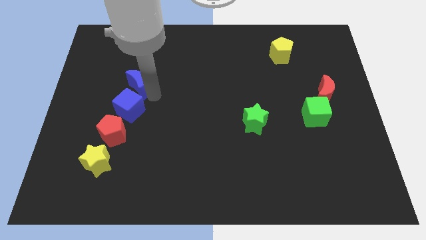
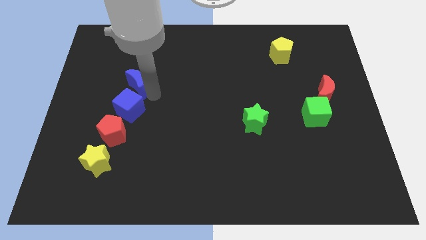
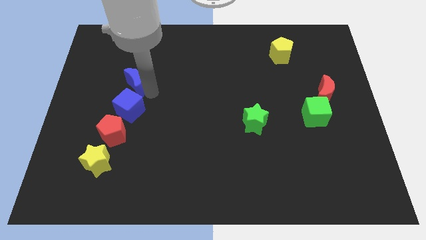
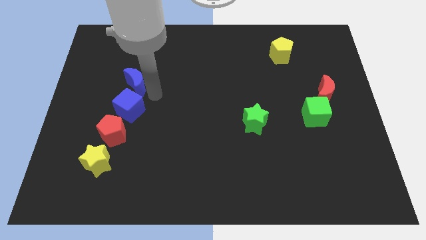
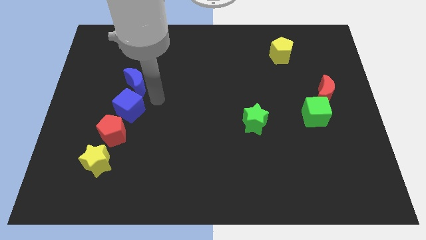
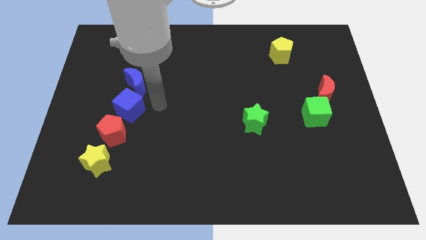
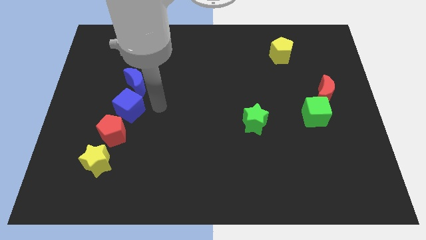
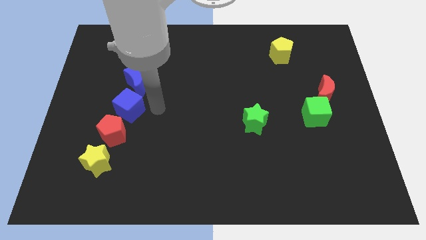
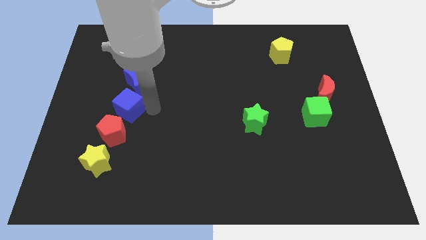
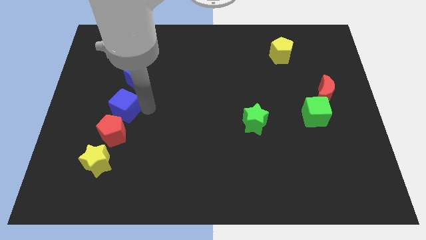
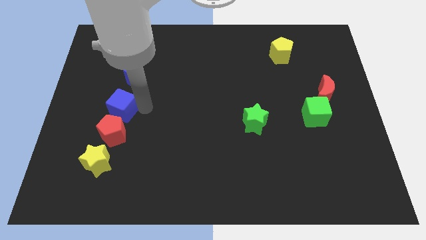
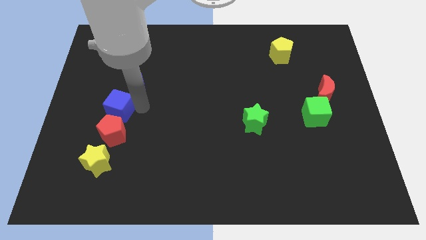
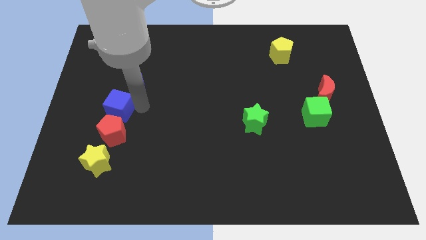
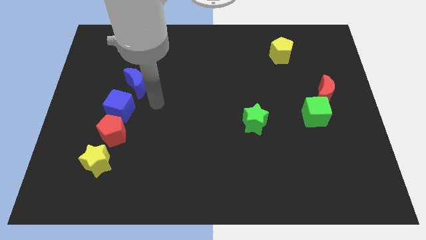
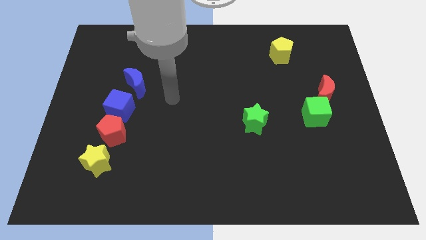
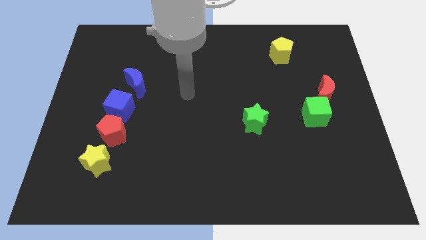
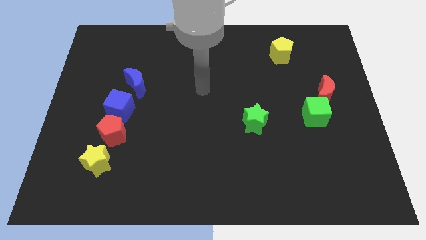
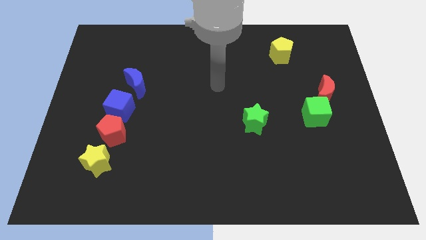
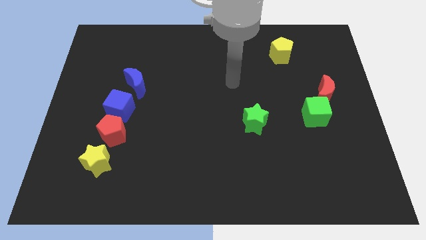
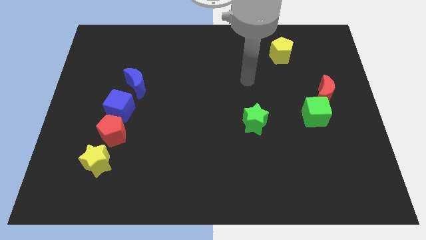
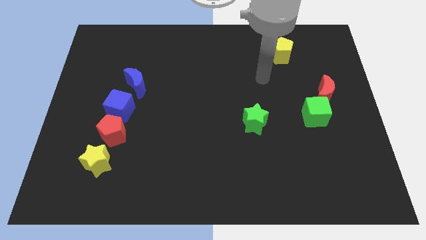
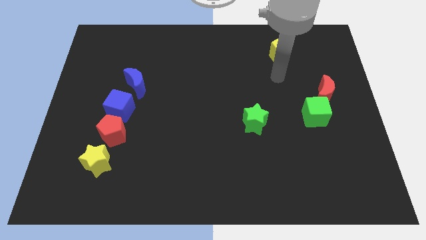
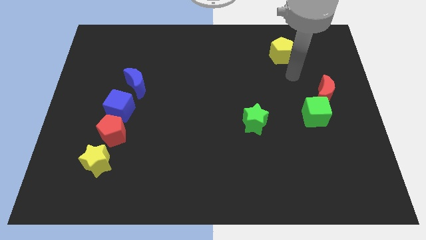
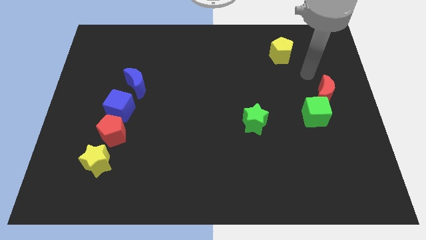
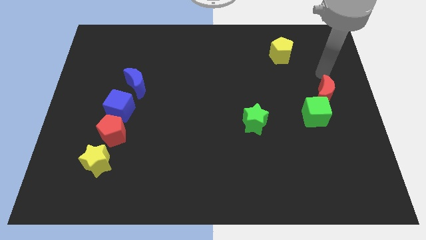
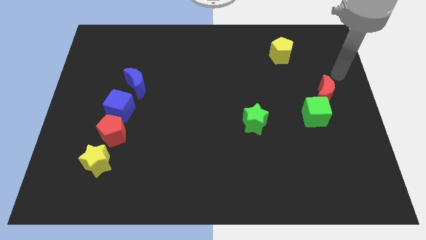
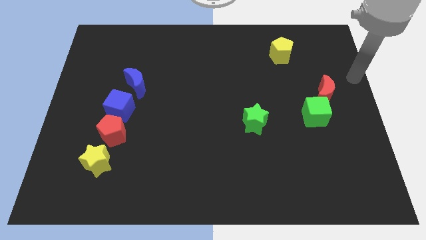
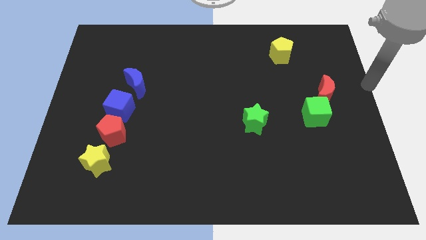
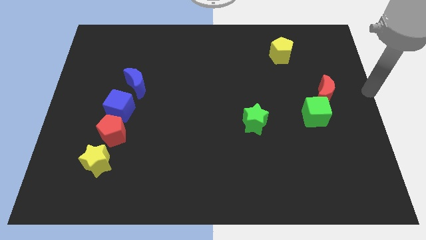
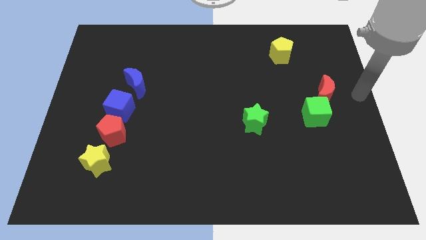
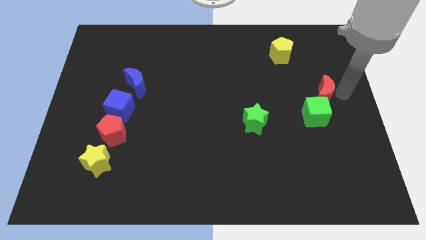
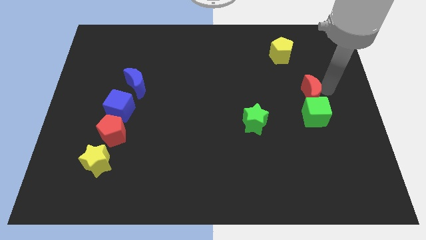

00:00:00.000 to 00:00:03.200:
push the blue crescent and blue cube slightly to the left

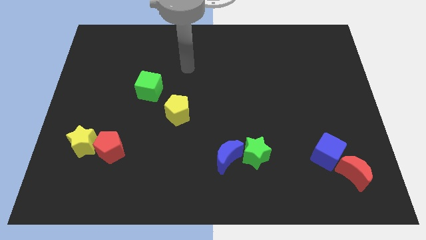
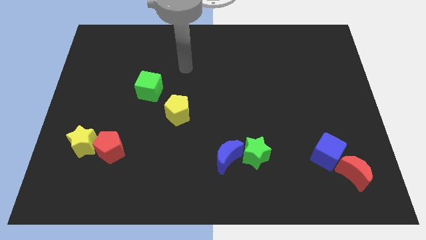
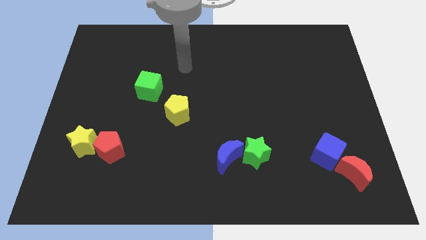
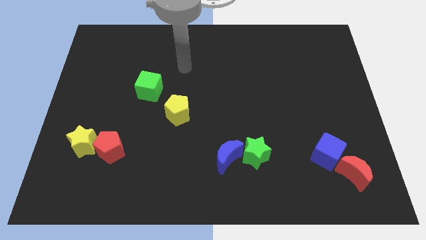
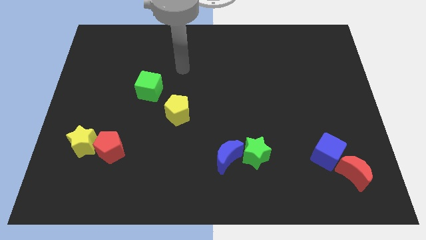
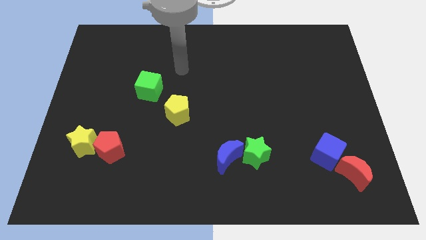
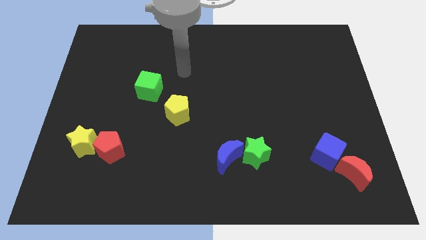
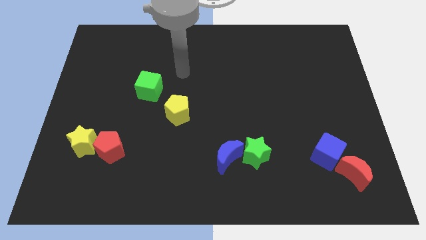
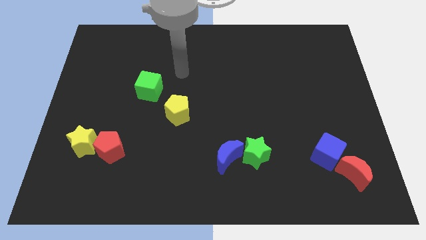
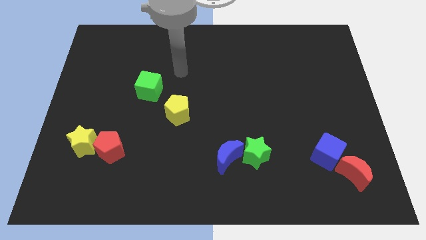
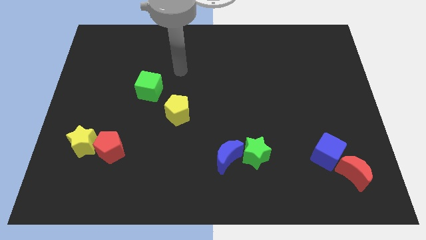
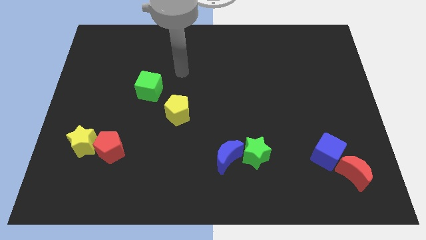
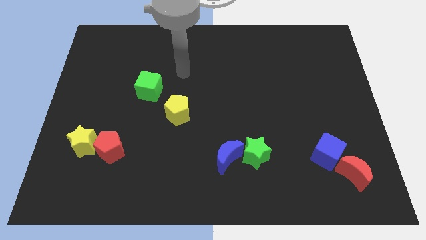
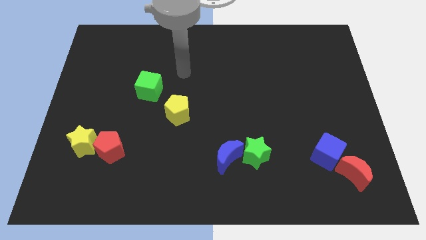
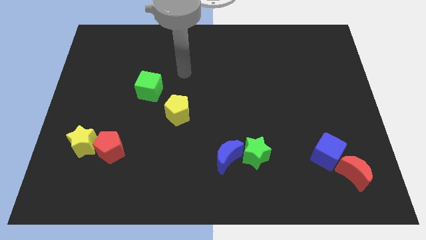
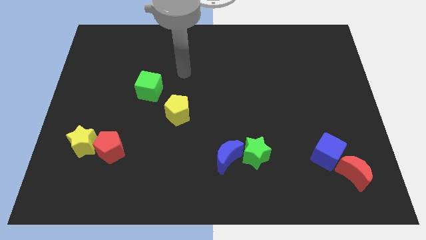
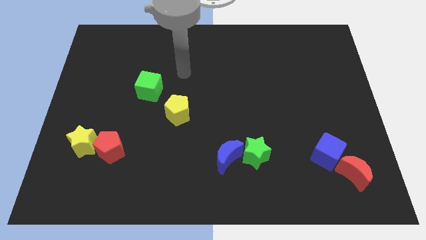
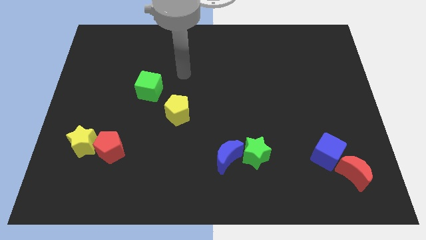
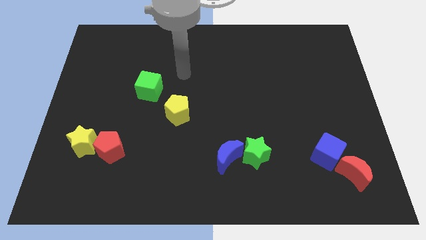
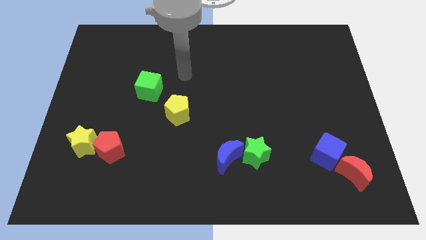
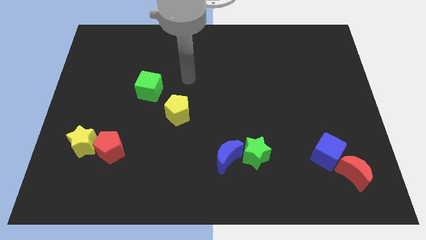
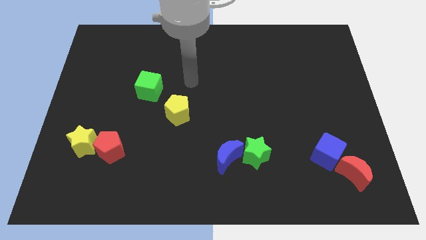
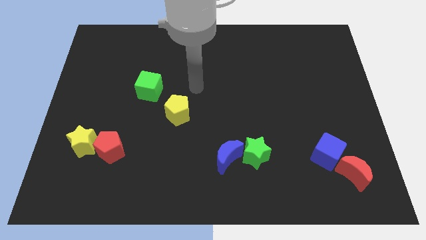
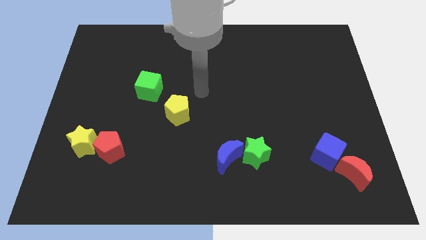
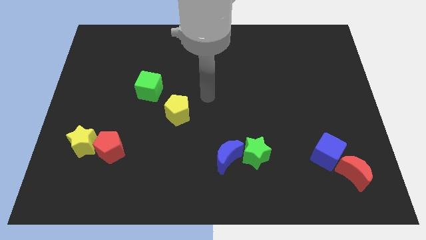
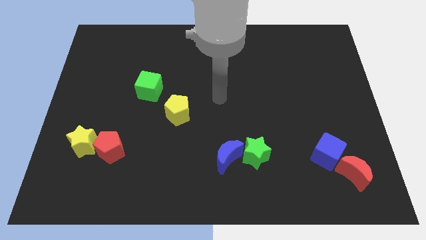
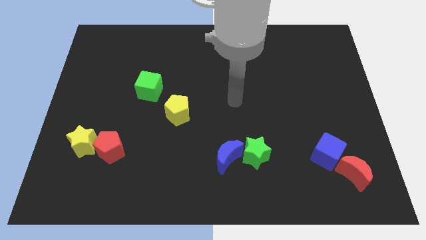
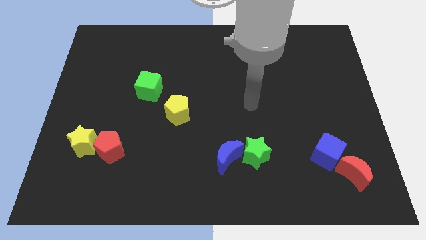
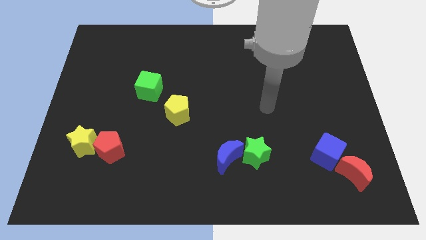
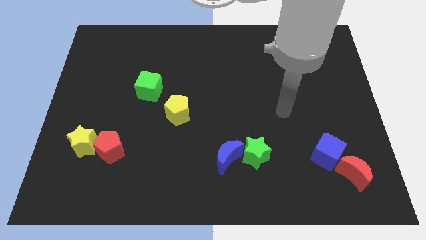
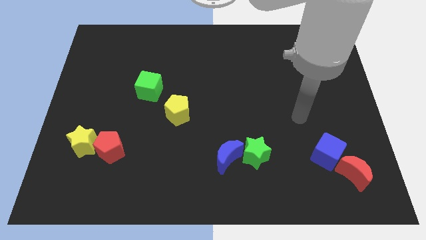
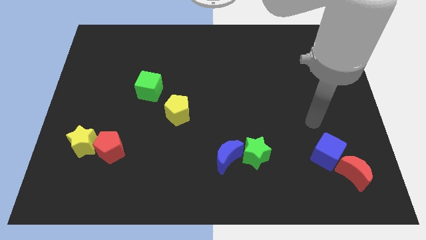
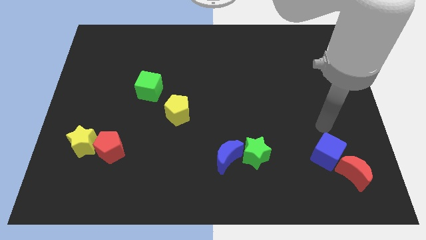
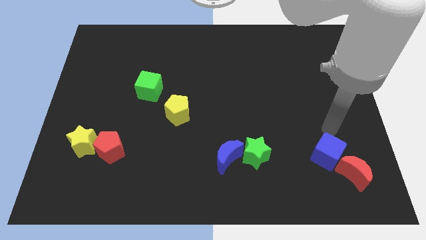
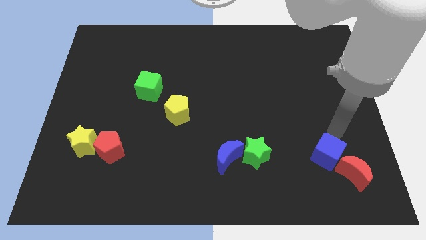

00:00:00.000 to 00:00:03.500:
move your arm near the blue cube

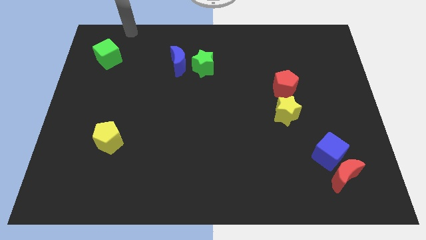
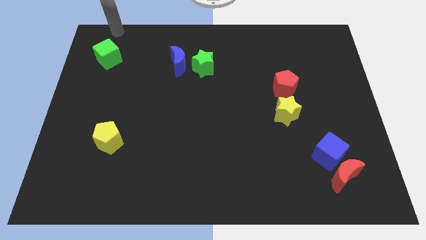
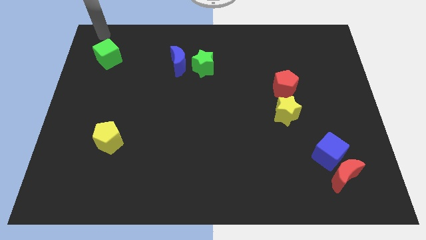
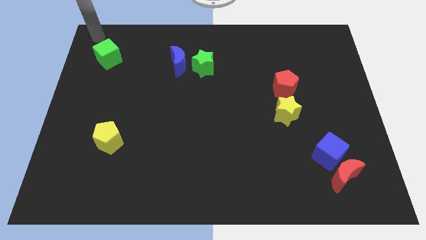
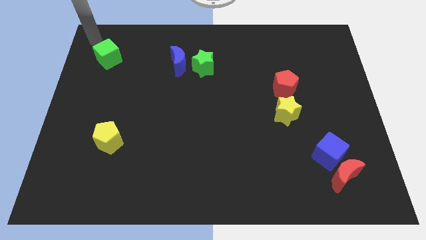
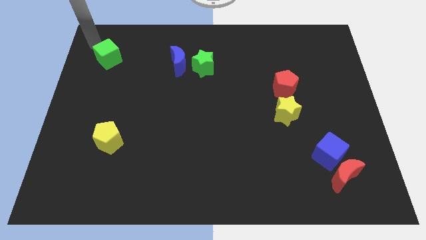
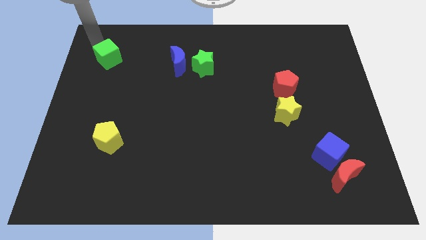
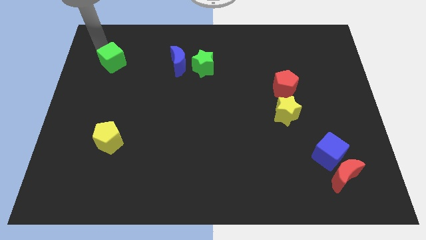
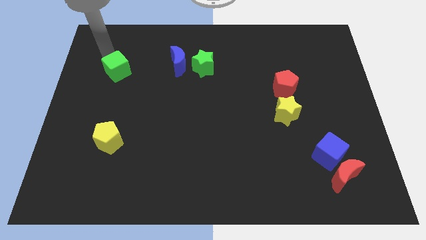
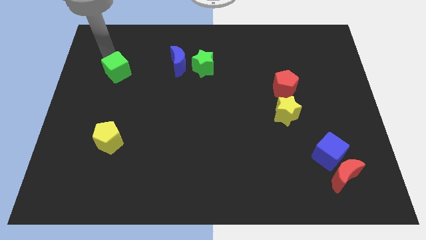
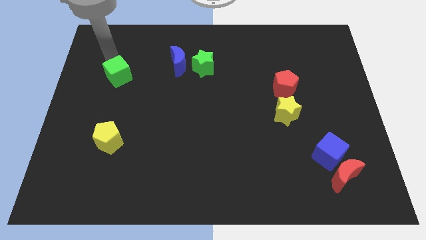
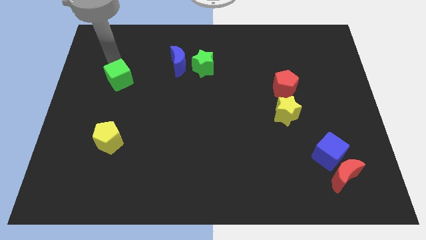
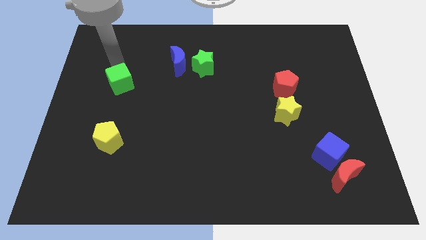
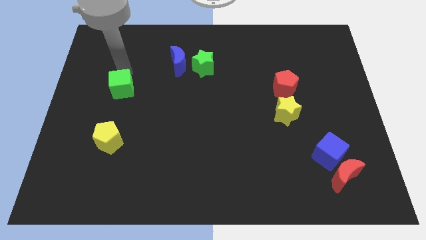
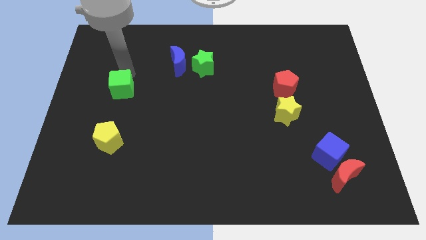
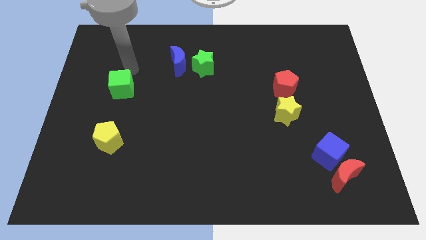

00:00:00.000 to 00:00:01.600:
slightly move the green cube to the bottom of the board

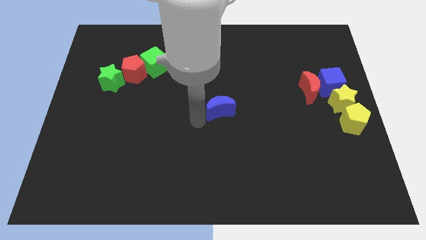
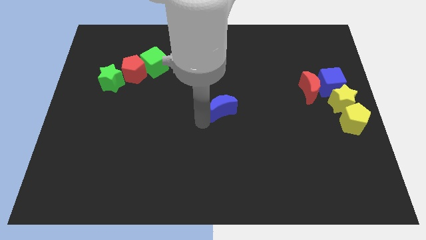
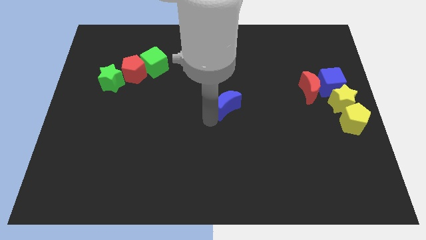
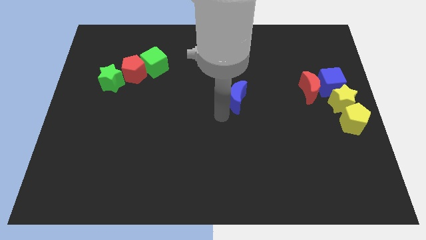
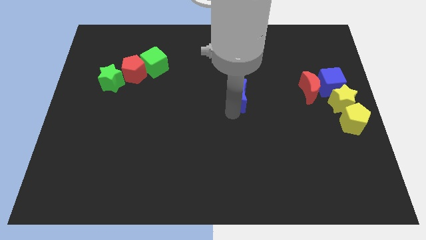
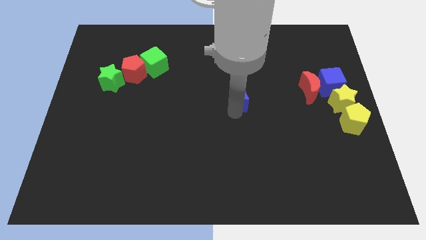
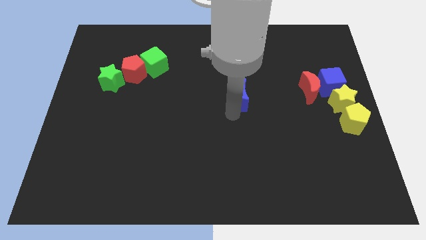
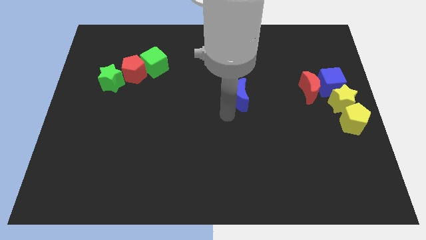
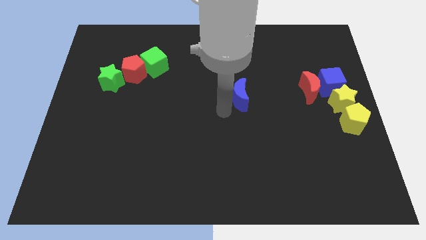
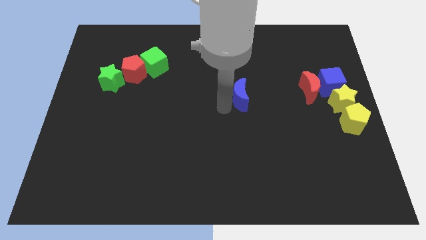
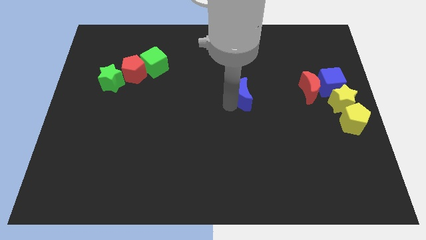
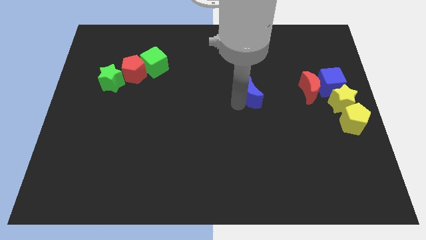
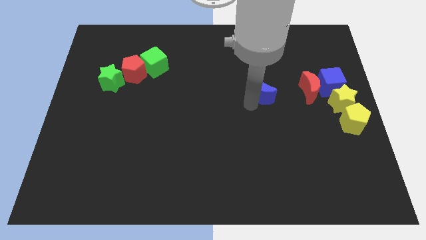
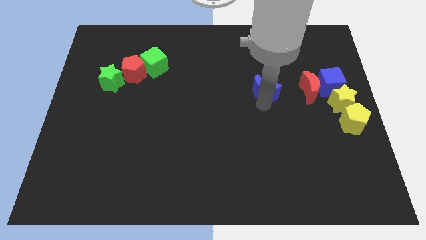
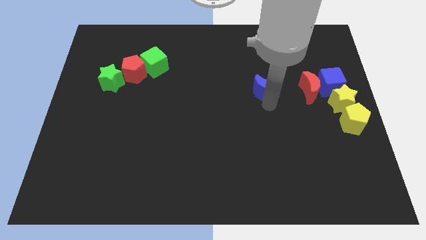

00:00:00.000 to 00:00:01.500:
place the blue moon left to the red moon
